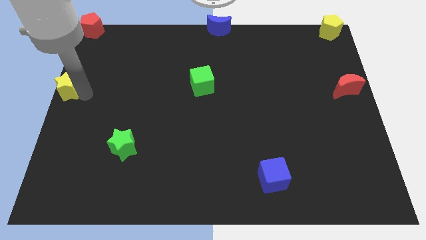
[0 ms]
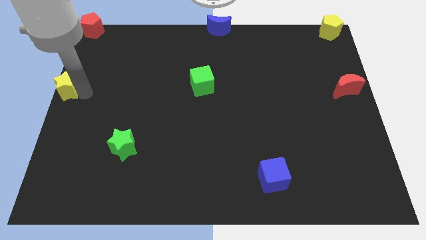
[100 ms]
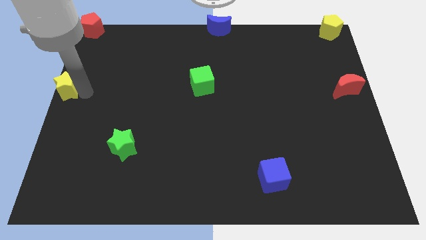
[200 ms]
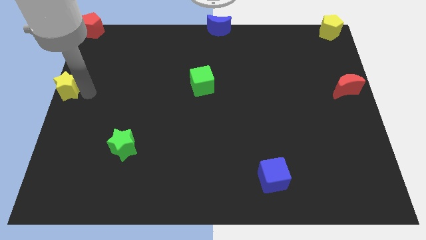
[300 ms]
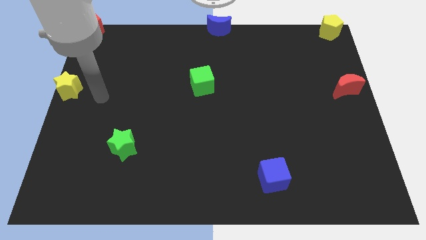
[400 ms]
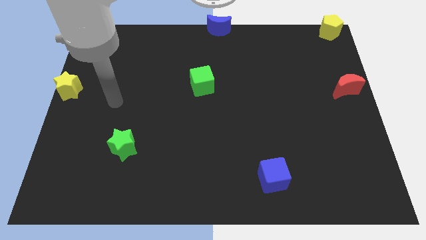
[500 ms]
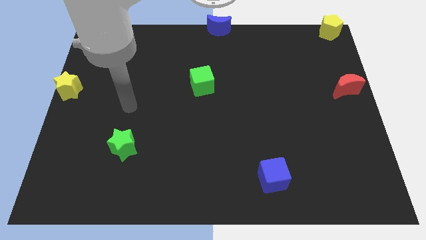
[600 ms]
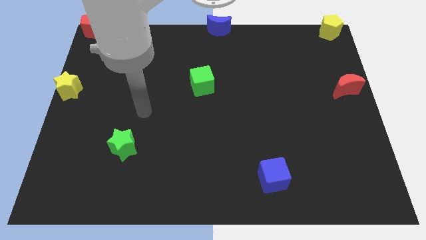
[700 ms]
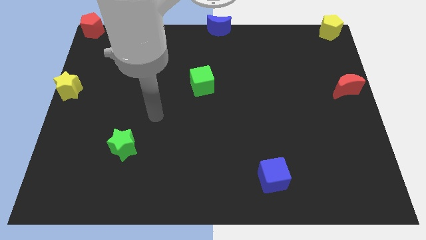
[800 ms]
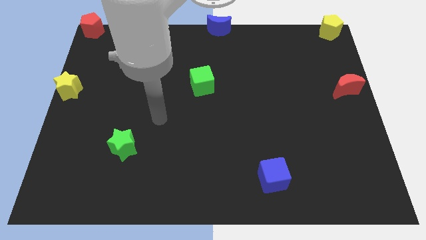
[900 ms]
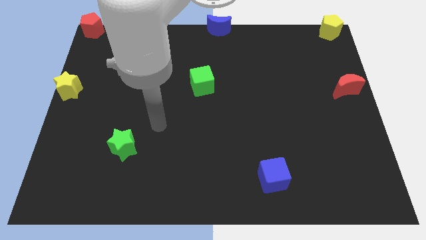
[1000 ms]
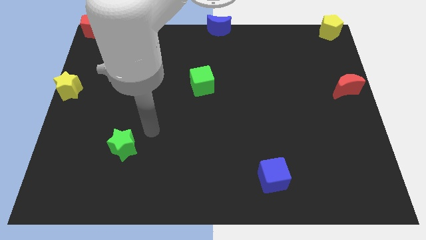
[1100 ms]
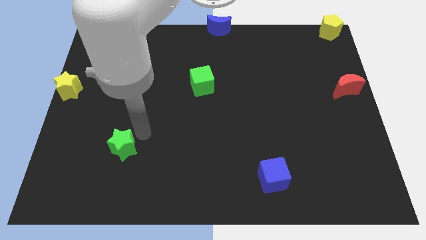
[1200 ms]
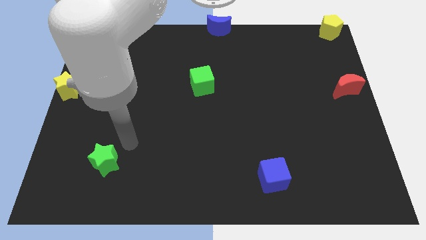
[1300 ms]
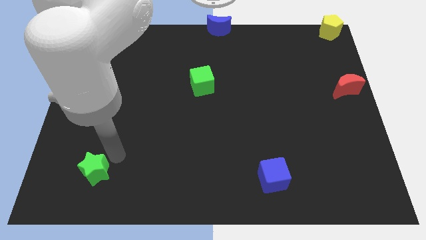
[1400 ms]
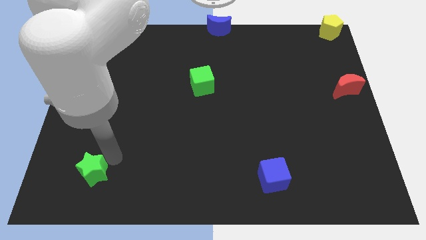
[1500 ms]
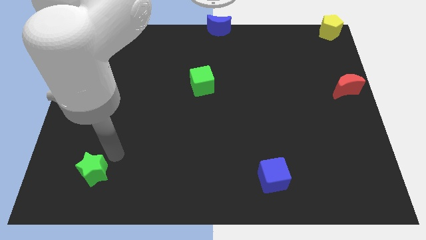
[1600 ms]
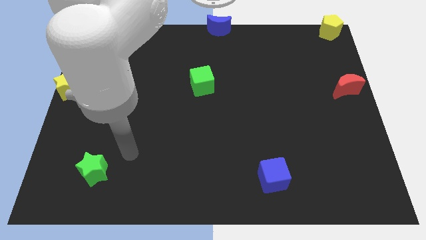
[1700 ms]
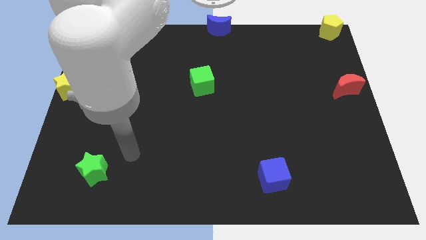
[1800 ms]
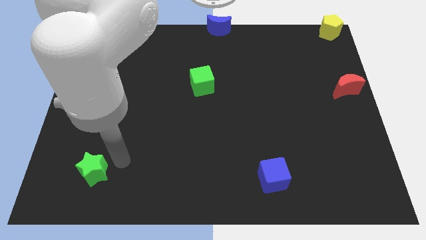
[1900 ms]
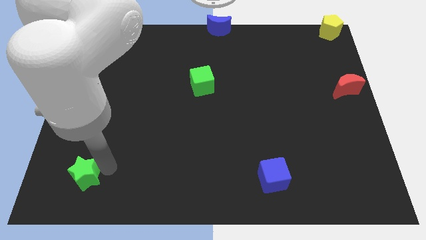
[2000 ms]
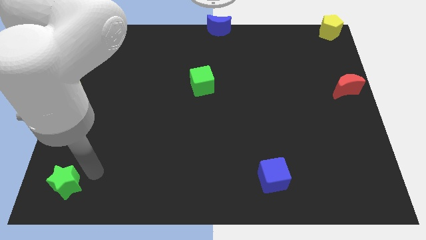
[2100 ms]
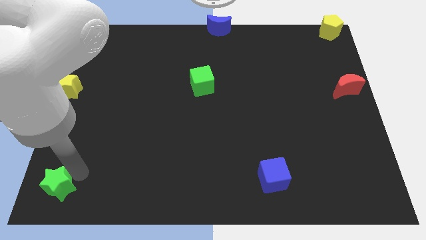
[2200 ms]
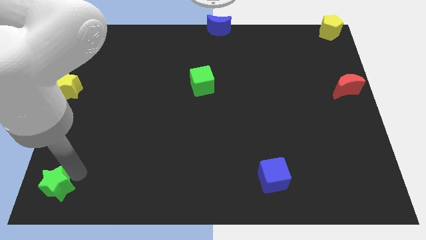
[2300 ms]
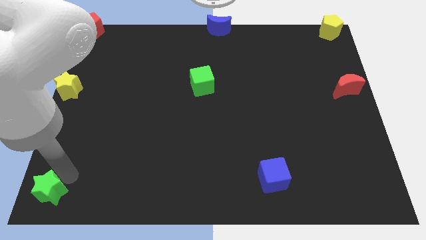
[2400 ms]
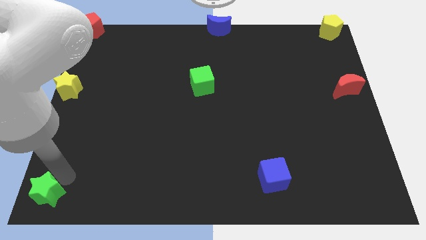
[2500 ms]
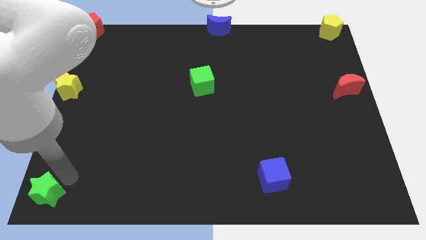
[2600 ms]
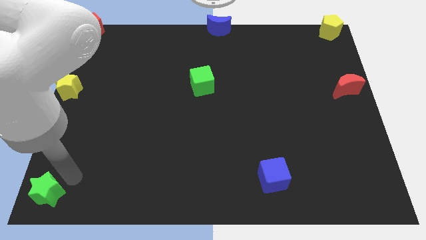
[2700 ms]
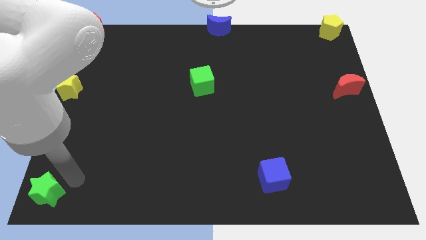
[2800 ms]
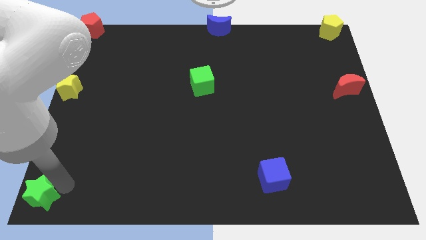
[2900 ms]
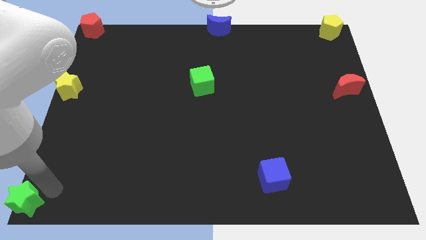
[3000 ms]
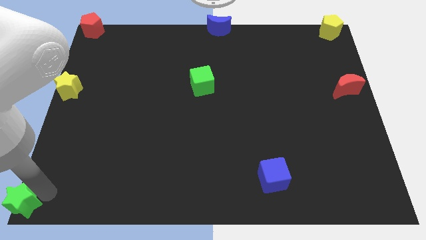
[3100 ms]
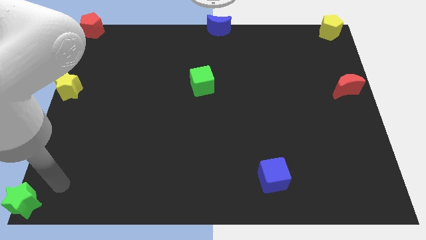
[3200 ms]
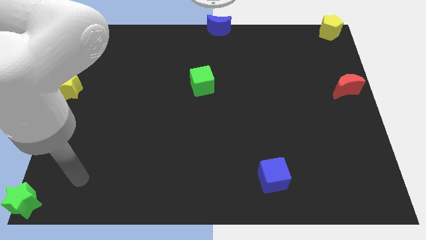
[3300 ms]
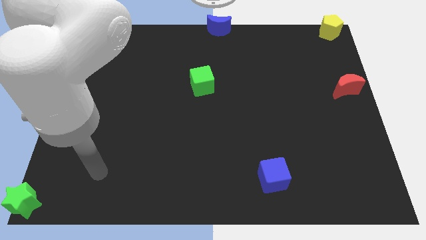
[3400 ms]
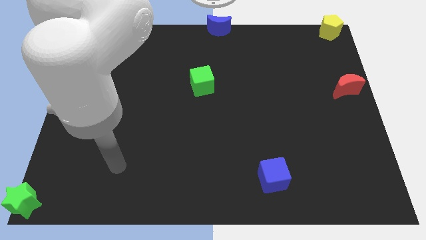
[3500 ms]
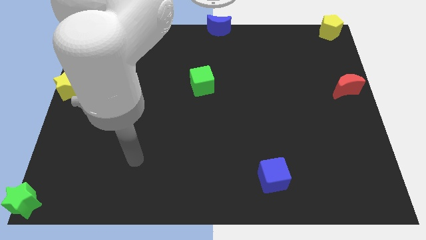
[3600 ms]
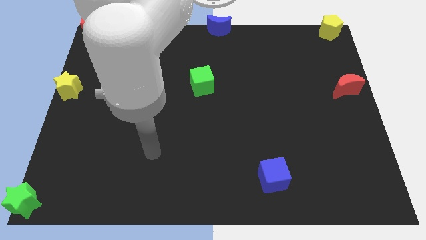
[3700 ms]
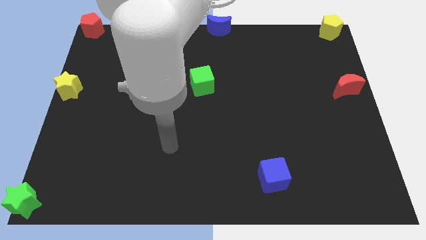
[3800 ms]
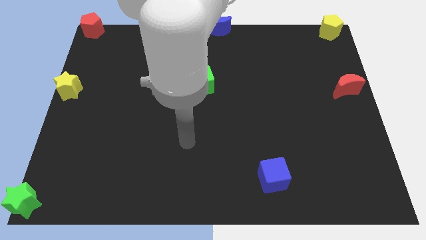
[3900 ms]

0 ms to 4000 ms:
push green star to the bottom left corner of the board

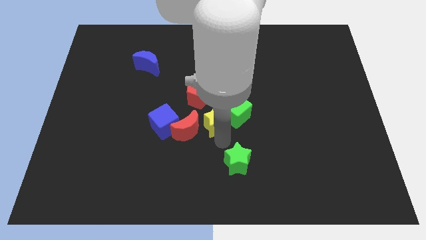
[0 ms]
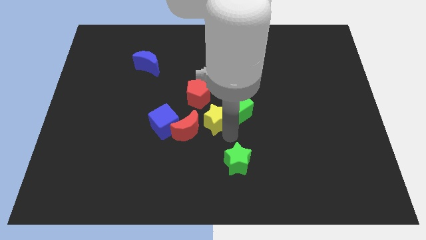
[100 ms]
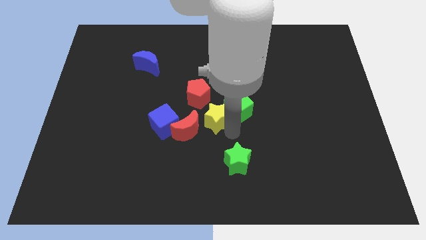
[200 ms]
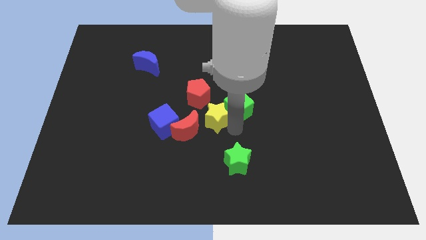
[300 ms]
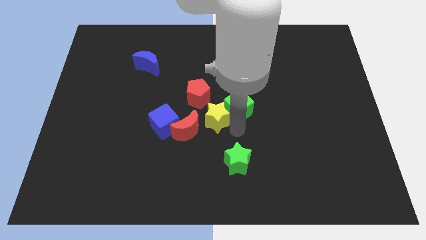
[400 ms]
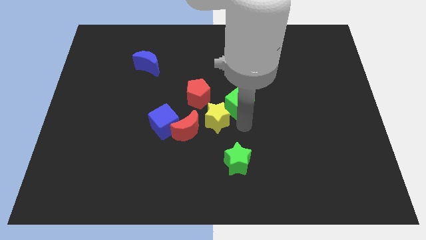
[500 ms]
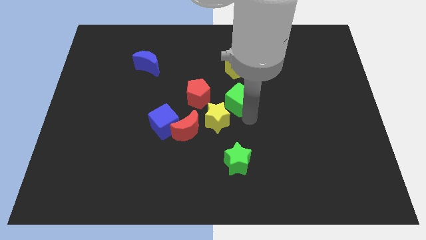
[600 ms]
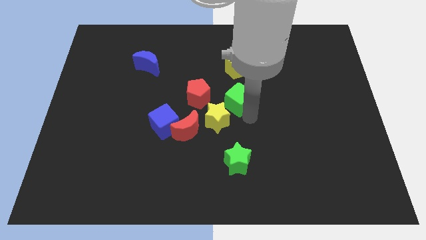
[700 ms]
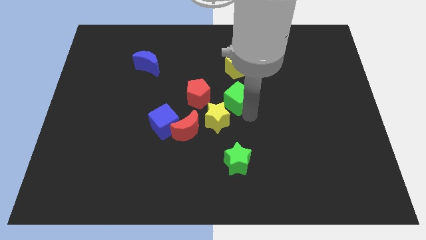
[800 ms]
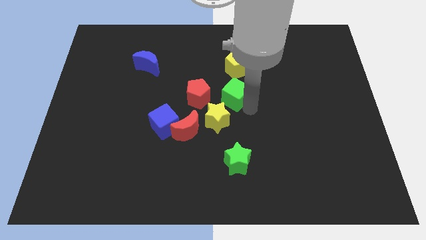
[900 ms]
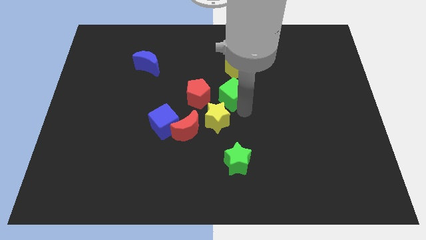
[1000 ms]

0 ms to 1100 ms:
place the green cube to the right of the red pentagon

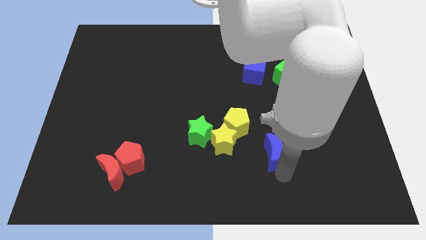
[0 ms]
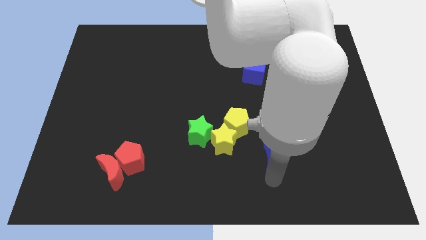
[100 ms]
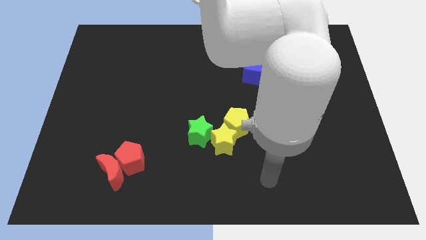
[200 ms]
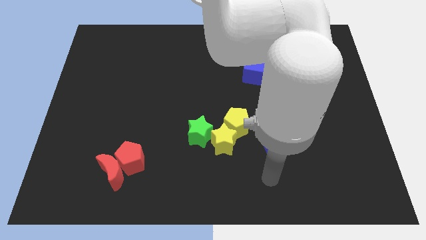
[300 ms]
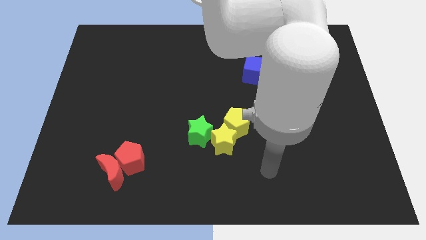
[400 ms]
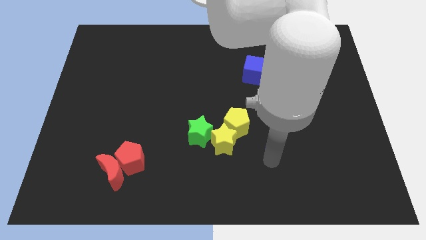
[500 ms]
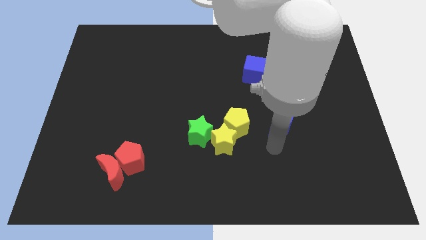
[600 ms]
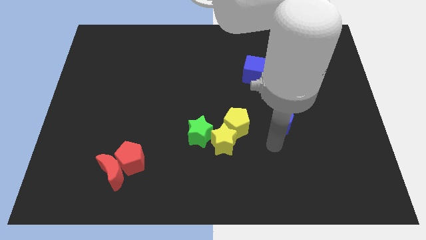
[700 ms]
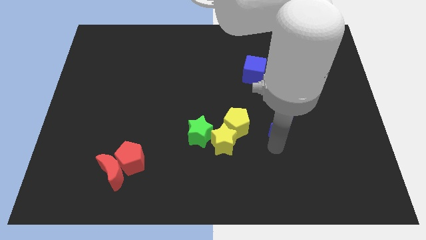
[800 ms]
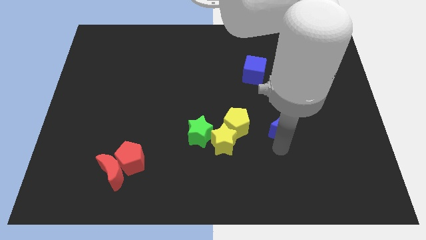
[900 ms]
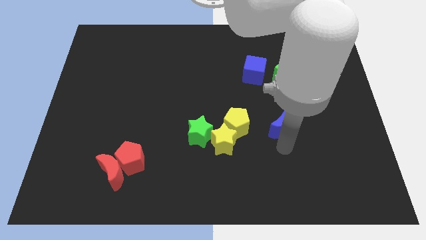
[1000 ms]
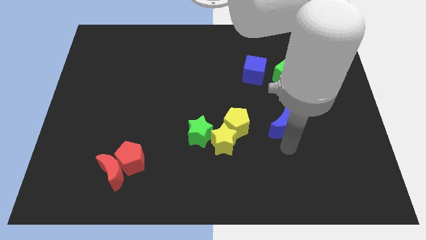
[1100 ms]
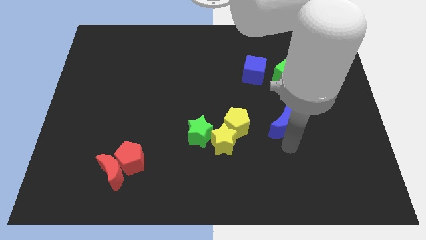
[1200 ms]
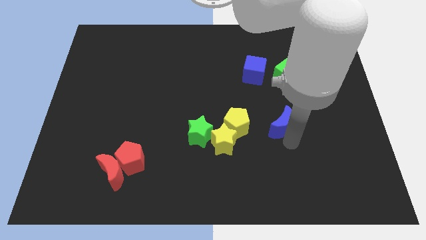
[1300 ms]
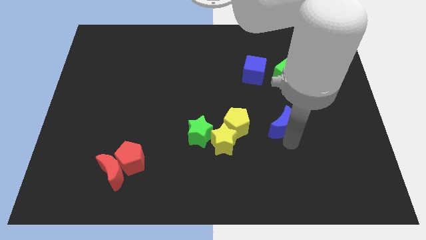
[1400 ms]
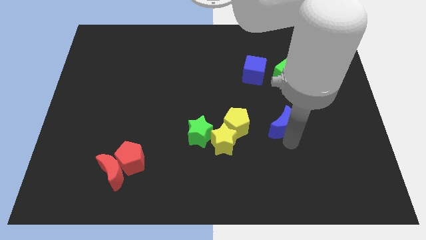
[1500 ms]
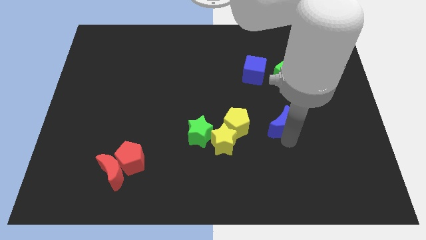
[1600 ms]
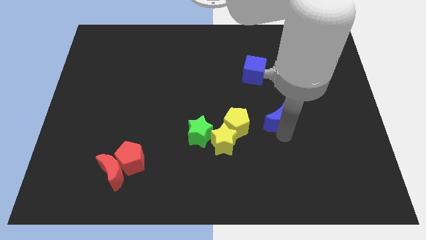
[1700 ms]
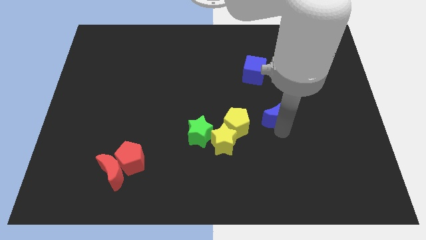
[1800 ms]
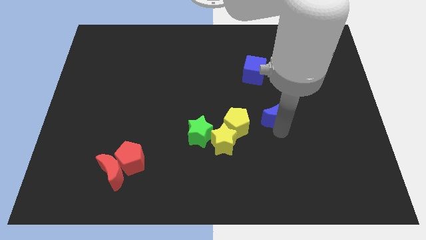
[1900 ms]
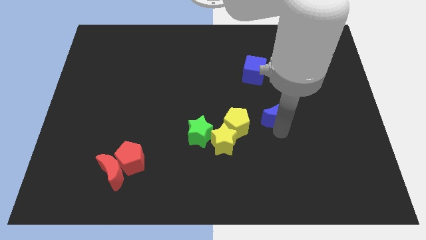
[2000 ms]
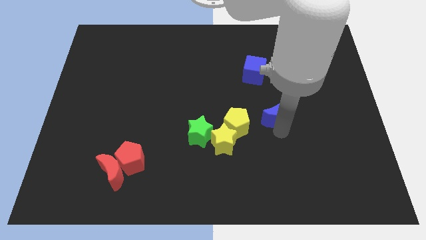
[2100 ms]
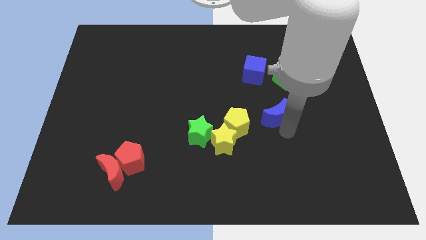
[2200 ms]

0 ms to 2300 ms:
move the blue crescent towards right to the yellow pentagon

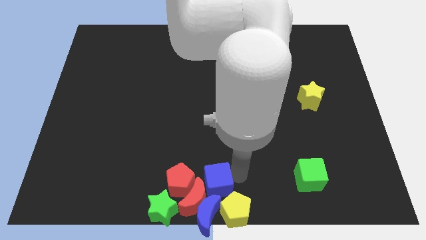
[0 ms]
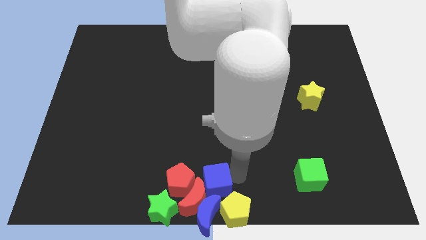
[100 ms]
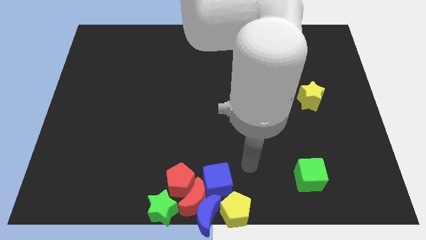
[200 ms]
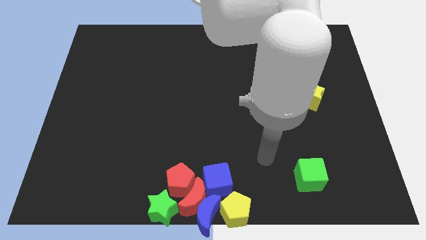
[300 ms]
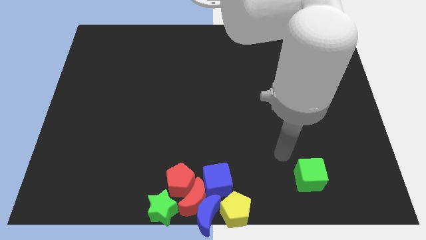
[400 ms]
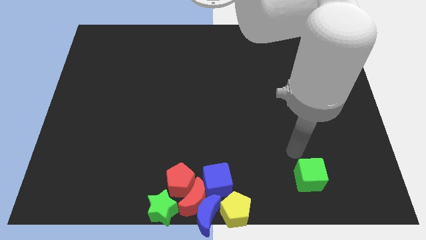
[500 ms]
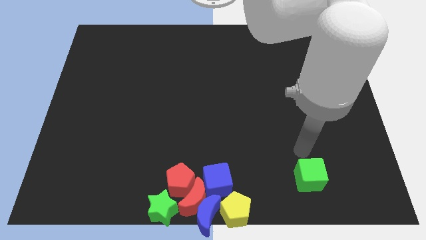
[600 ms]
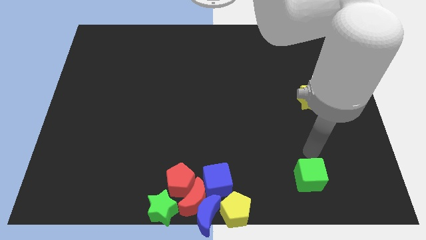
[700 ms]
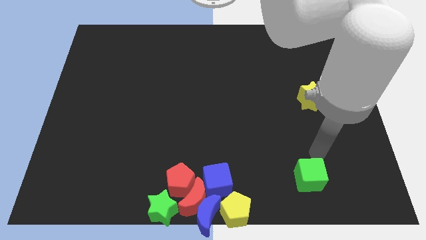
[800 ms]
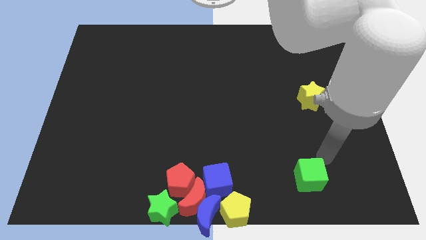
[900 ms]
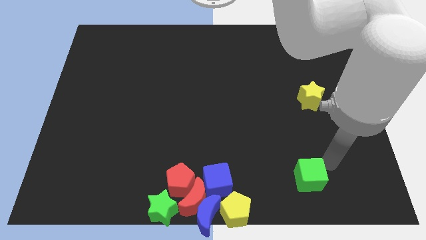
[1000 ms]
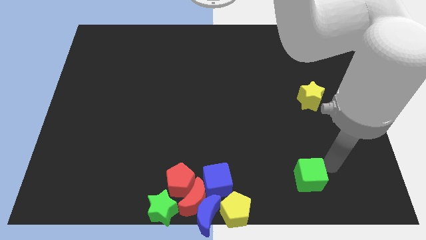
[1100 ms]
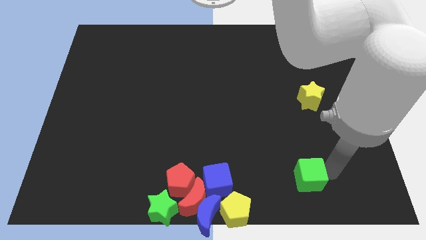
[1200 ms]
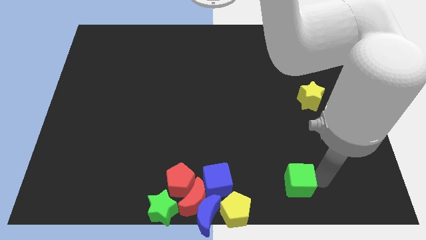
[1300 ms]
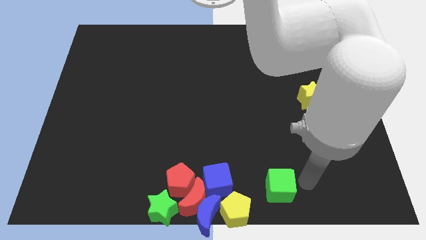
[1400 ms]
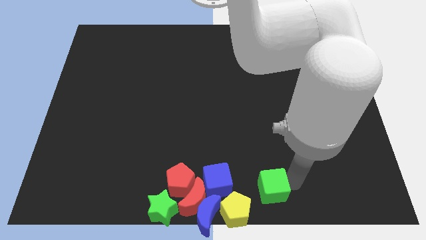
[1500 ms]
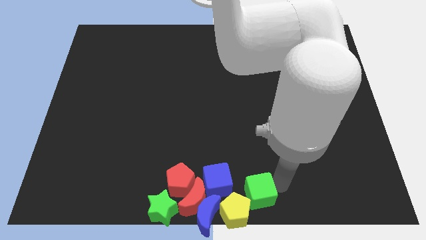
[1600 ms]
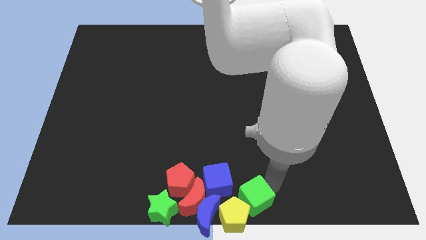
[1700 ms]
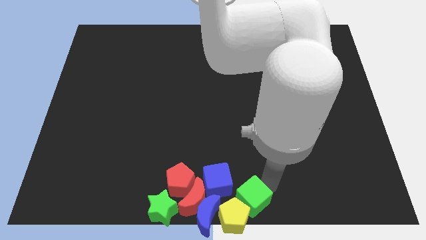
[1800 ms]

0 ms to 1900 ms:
move the green cube towards the yellow pentagon
